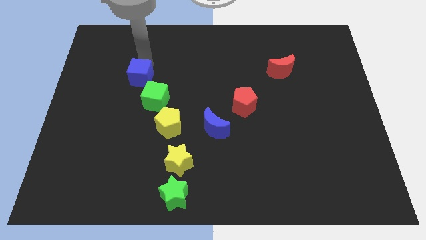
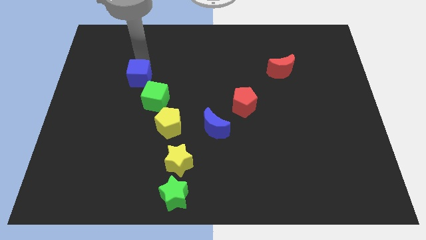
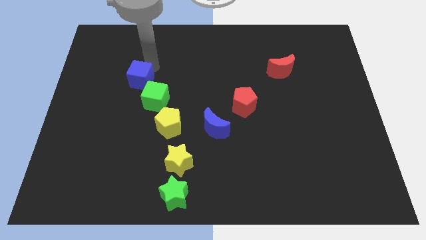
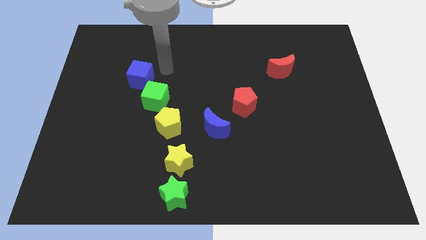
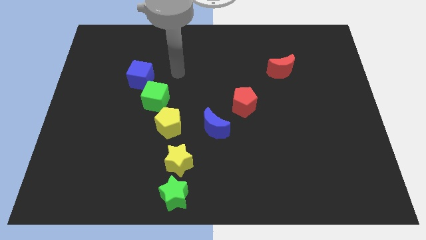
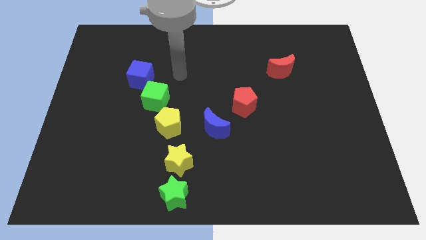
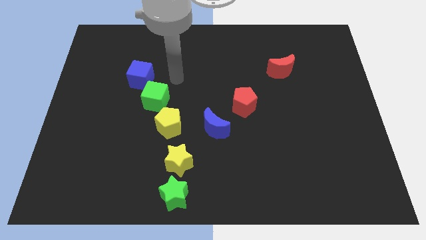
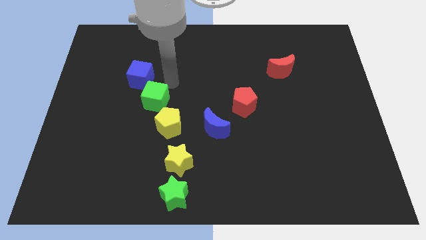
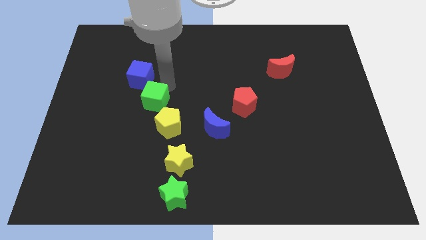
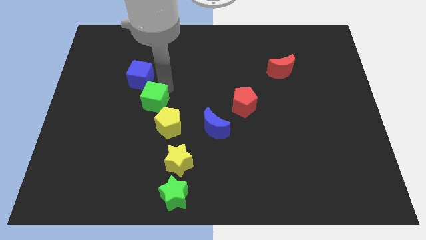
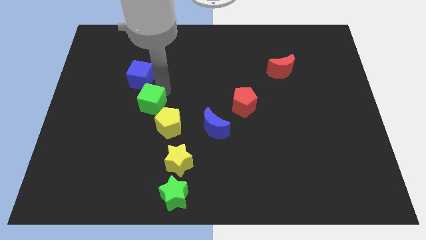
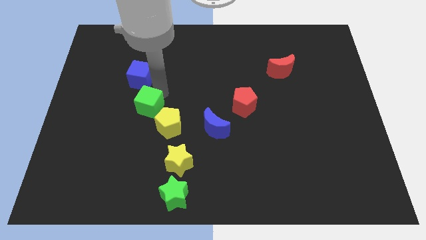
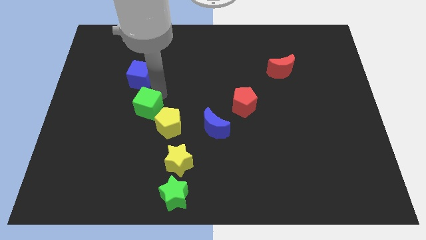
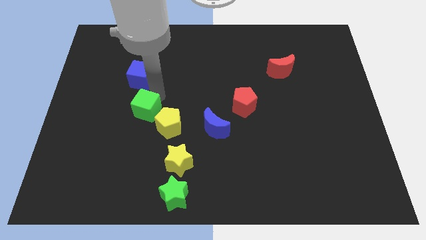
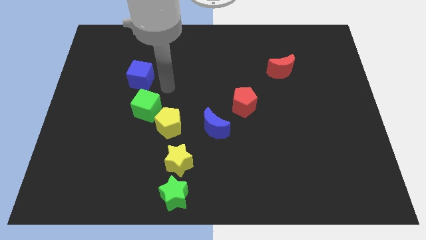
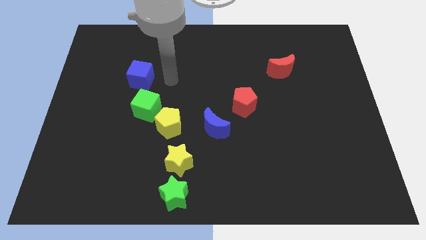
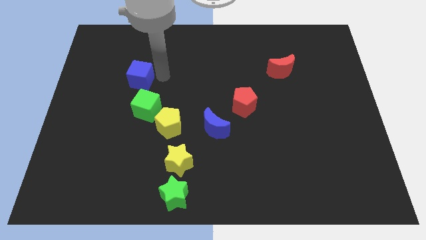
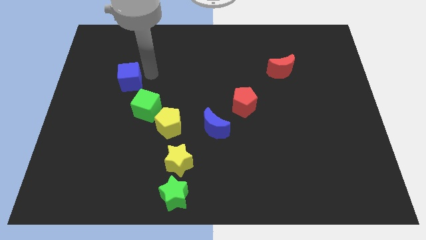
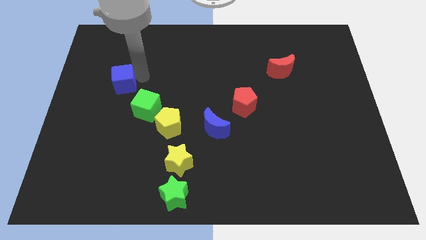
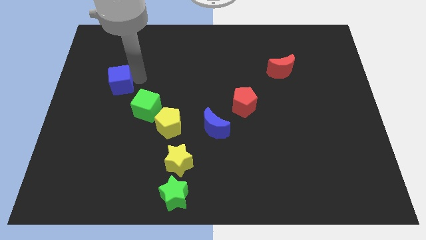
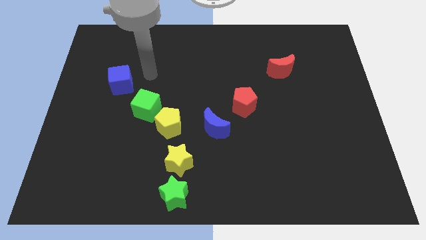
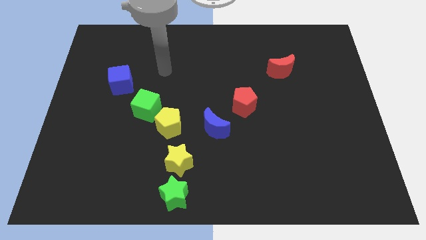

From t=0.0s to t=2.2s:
move the blue moon diagonally top left to the green cube

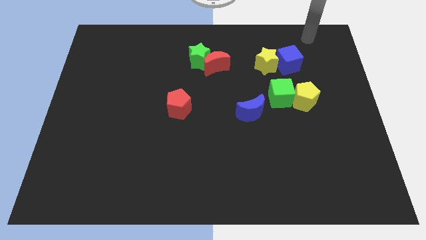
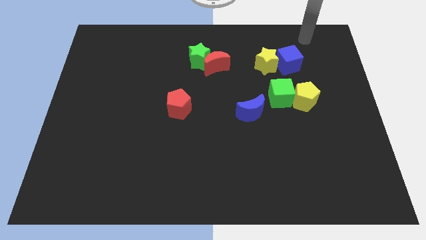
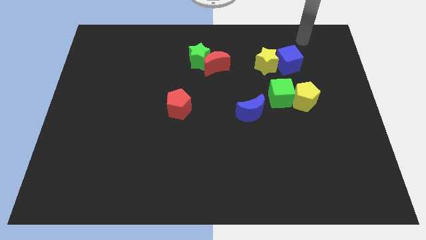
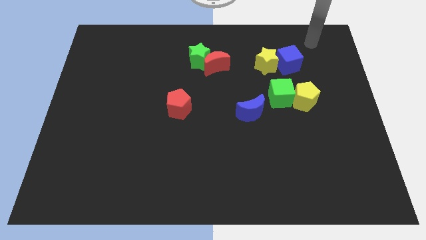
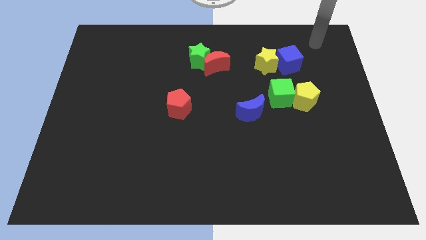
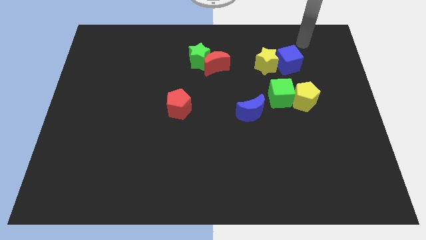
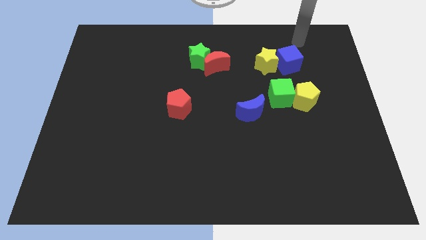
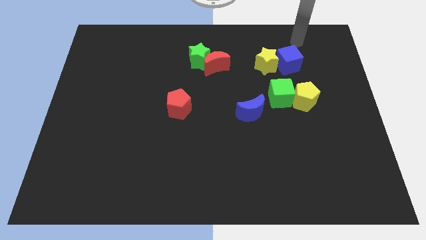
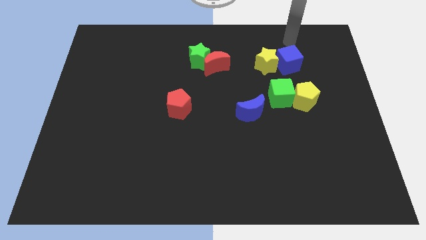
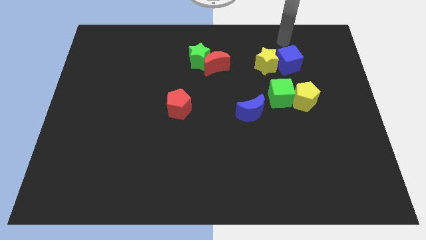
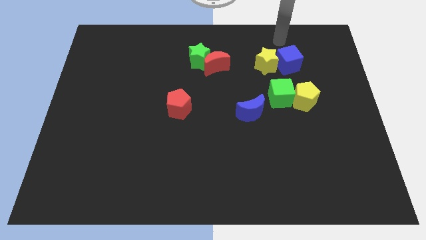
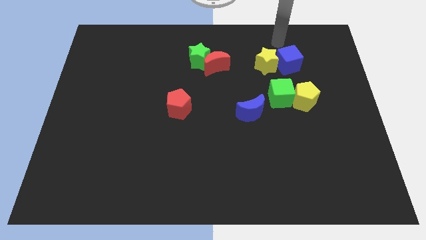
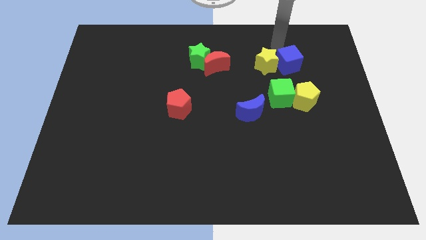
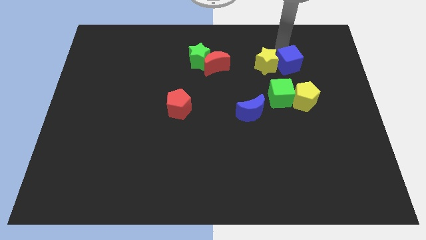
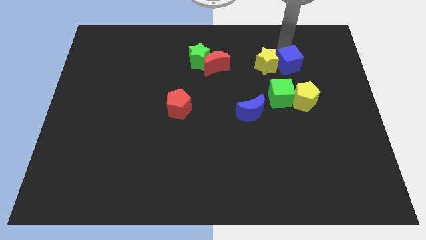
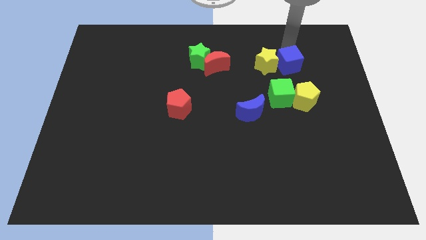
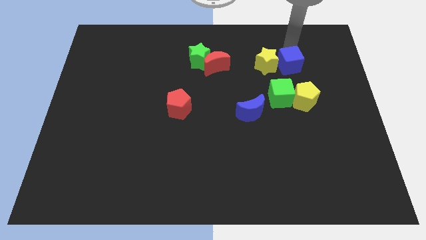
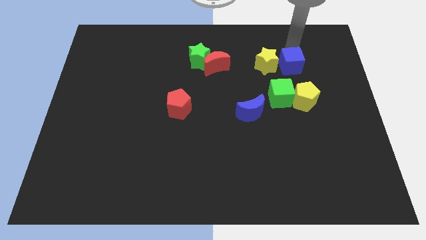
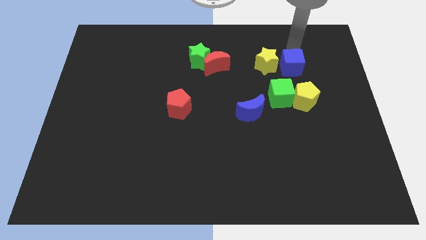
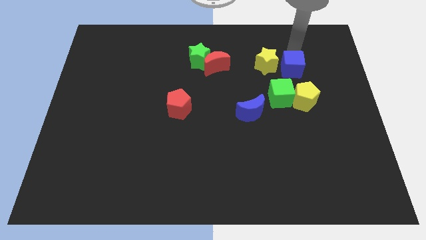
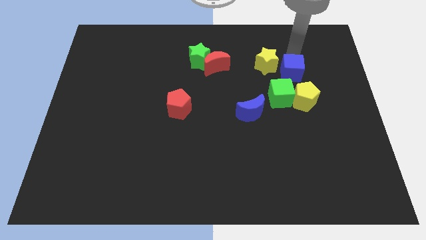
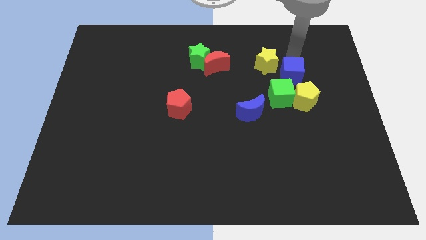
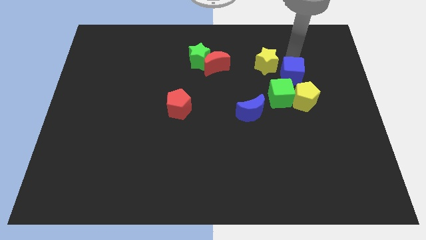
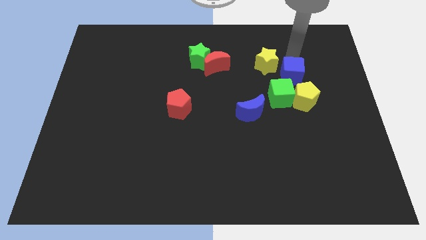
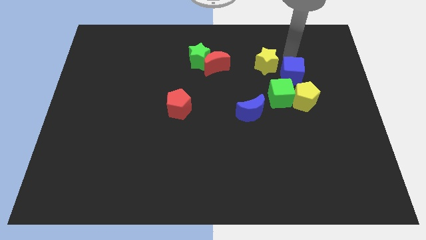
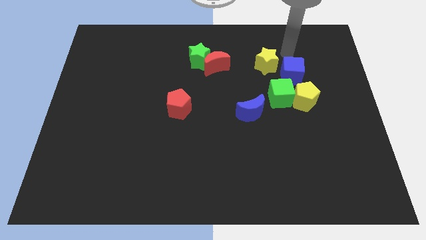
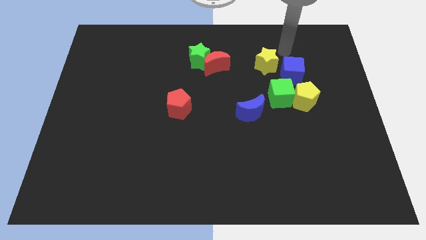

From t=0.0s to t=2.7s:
push the blue cube slightly towards the yellow pentagon

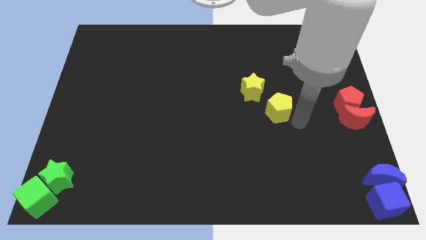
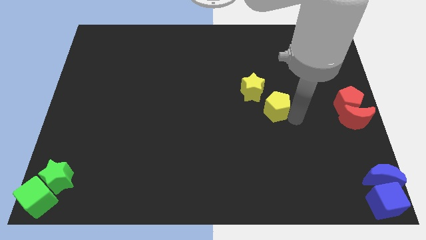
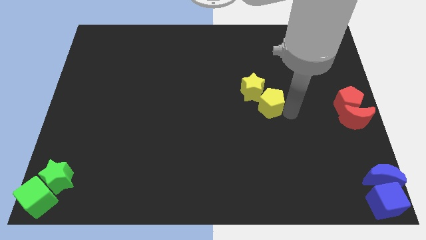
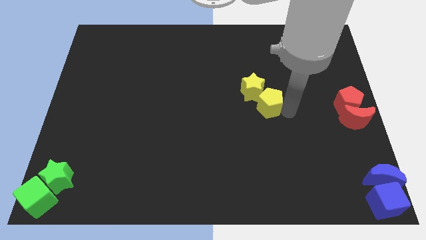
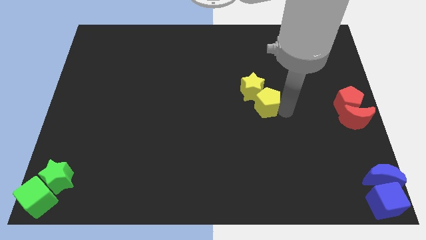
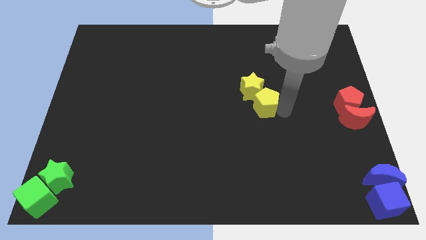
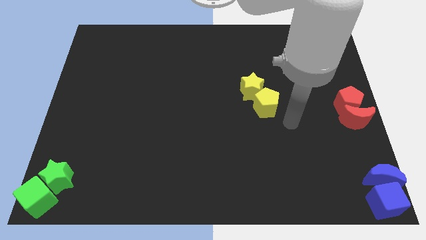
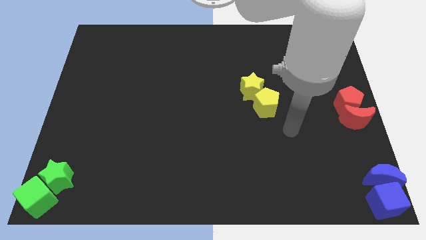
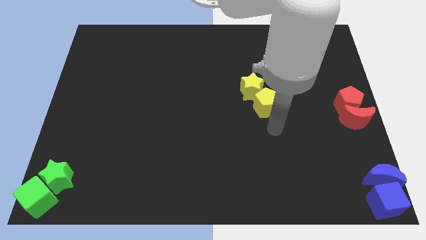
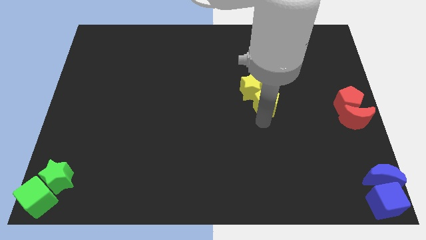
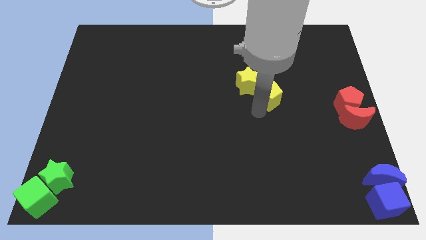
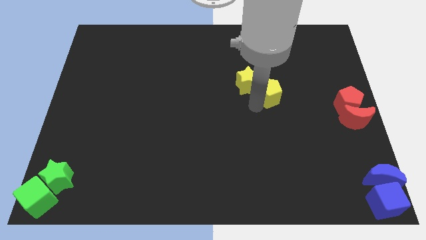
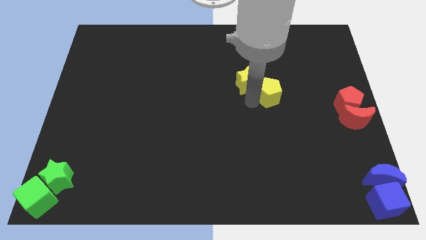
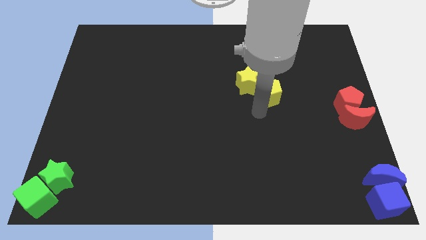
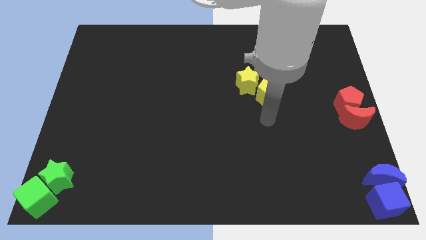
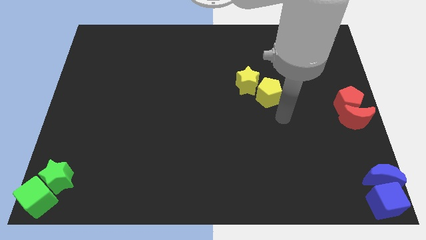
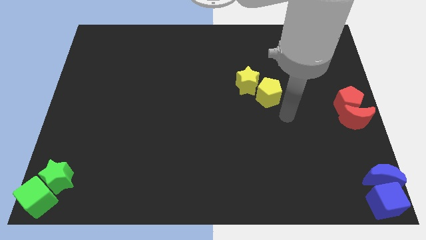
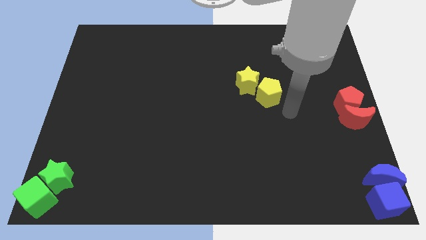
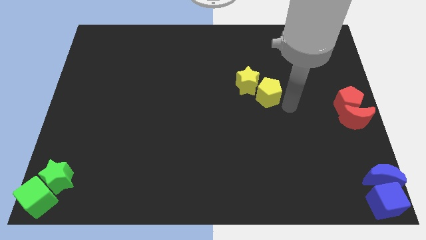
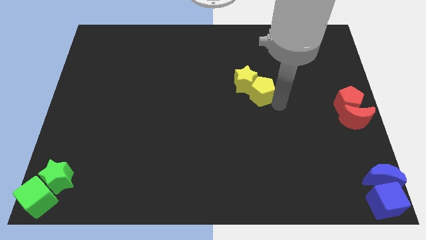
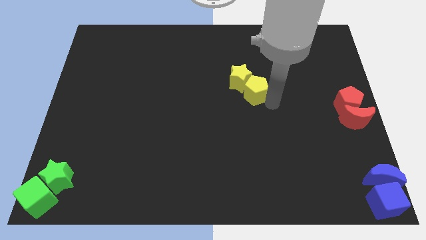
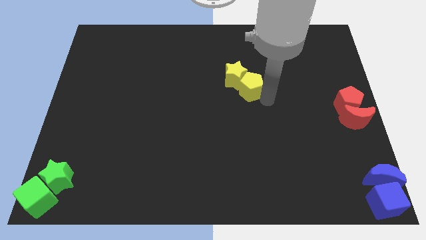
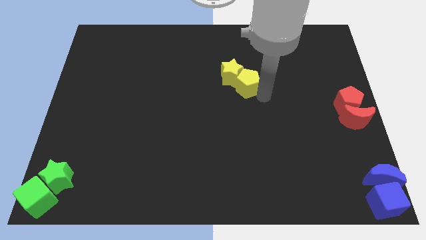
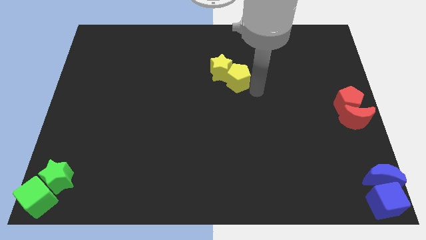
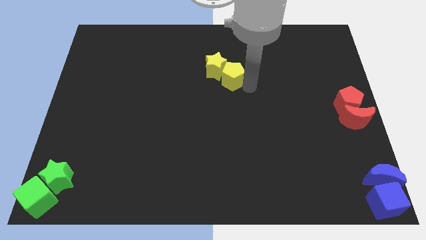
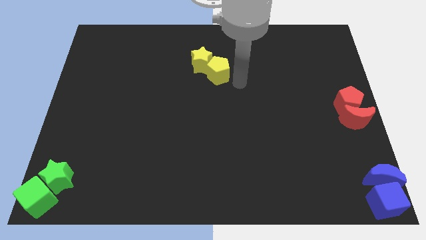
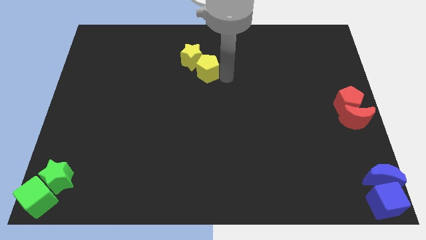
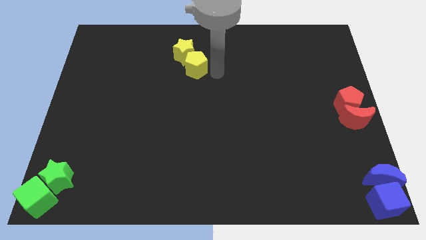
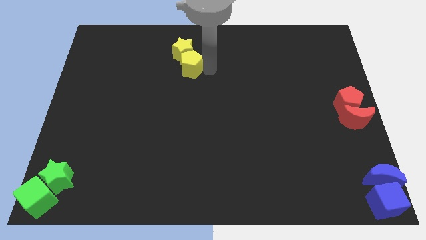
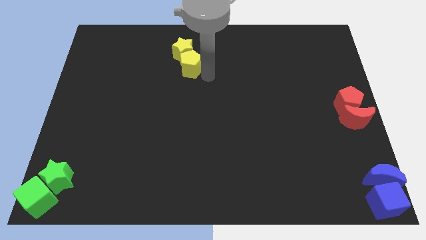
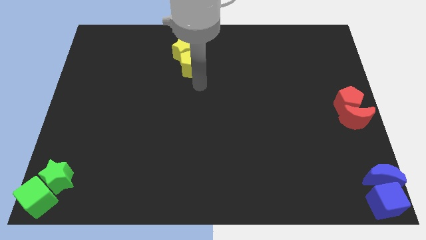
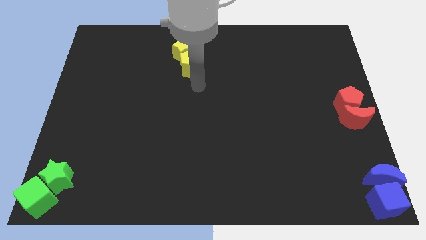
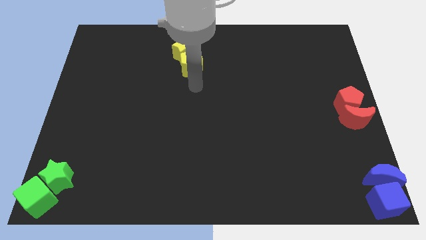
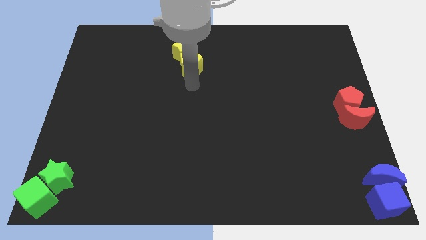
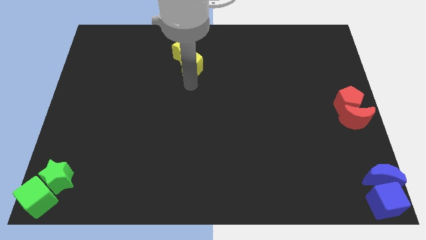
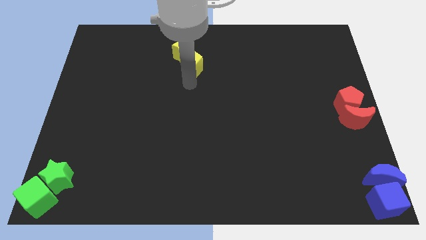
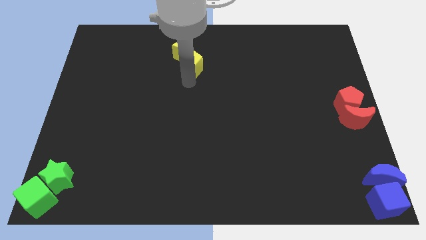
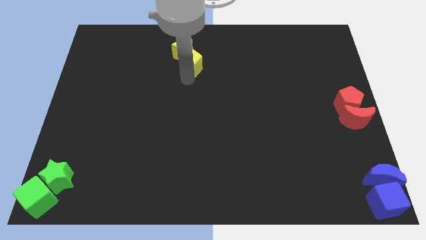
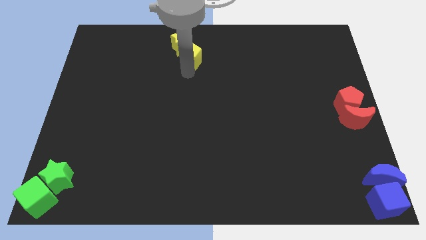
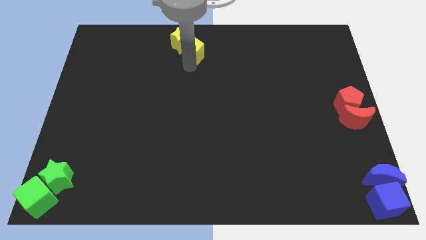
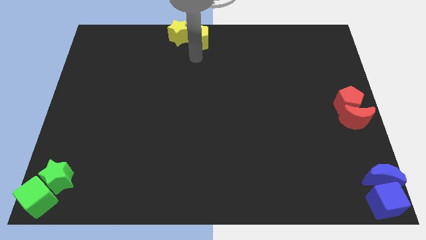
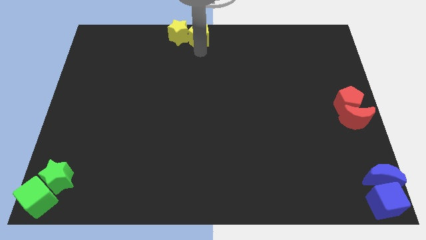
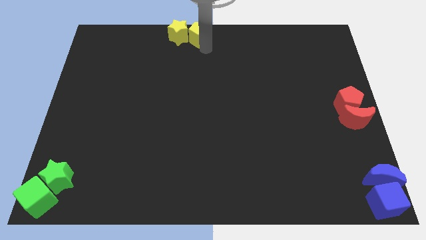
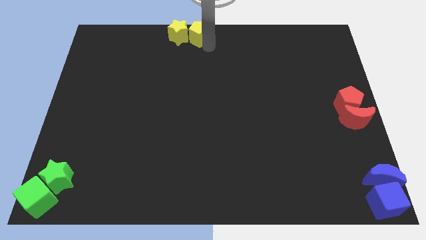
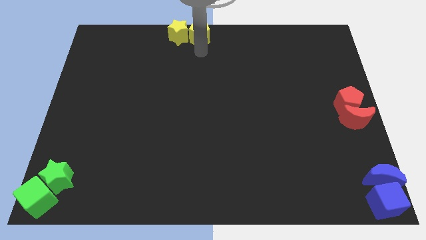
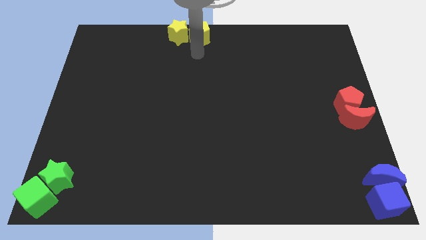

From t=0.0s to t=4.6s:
push the yellow pentagon into the yellow star and place them at the top center of the board
